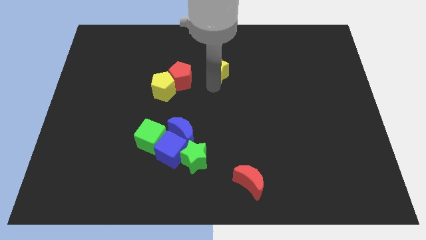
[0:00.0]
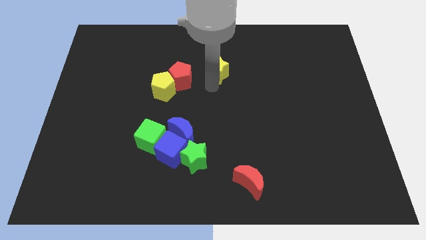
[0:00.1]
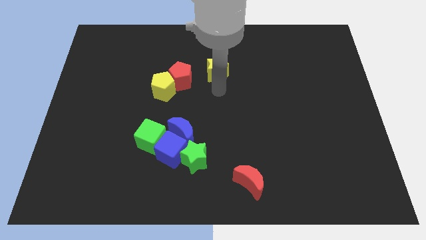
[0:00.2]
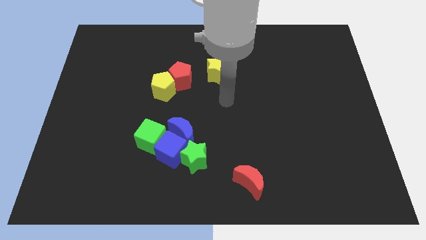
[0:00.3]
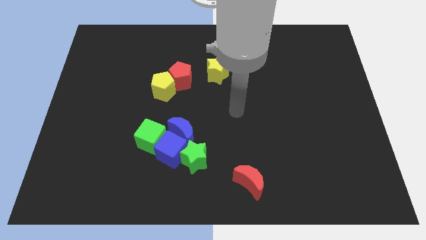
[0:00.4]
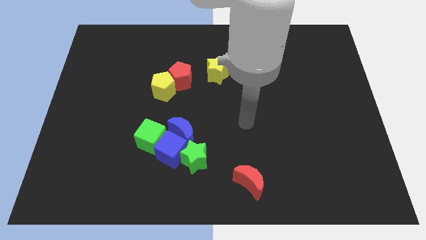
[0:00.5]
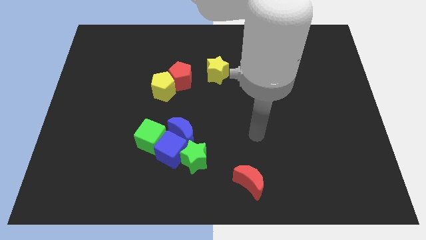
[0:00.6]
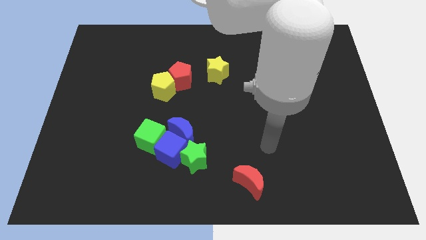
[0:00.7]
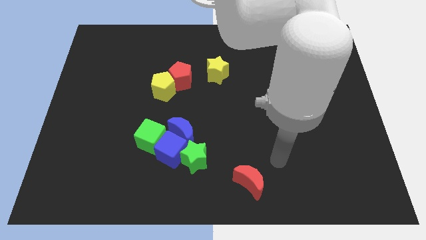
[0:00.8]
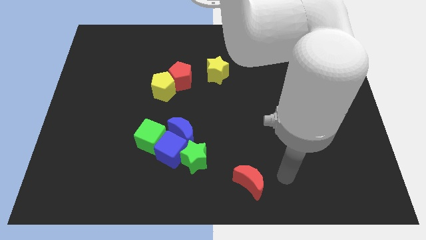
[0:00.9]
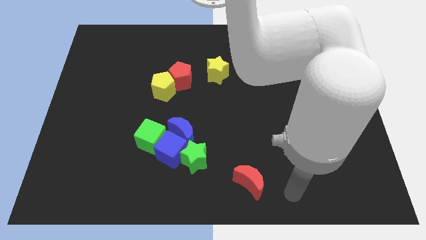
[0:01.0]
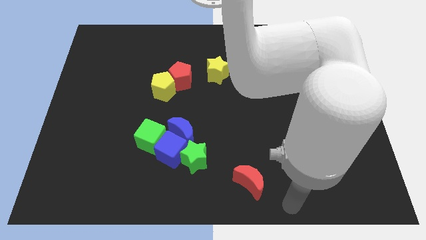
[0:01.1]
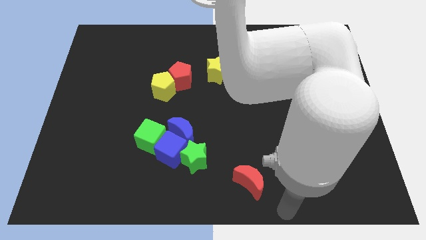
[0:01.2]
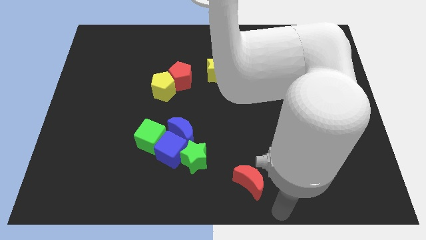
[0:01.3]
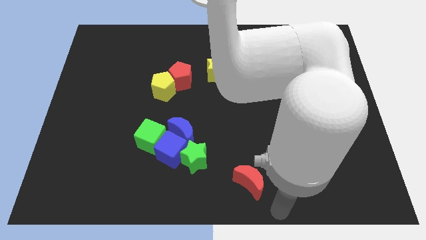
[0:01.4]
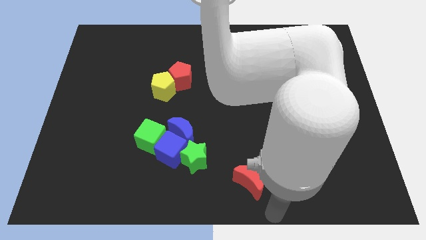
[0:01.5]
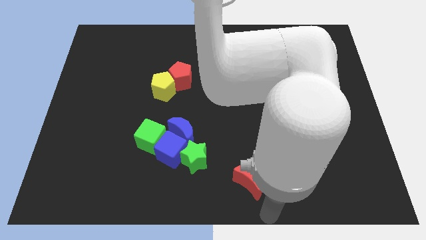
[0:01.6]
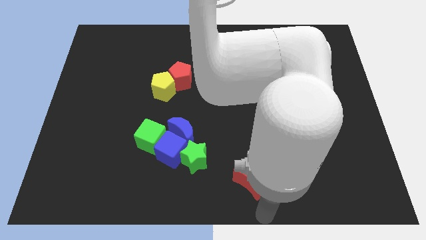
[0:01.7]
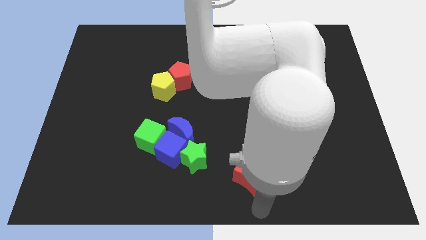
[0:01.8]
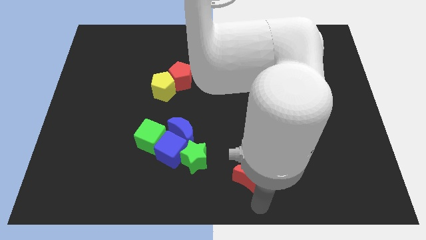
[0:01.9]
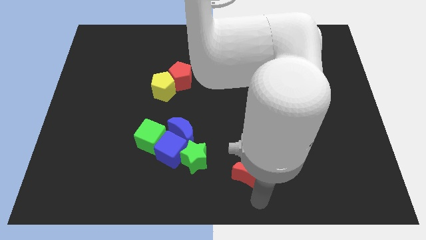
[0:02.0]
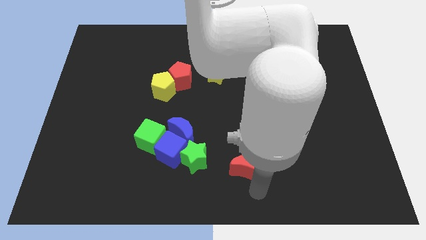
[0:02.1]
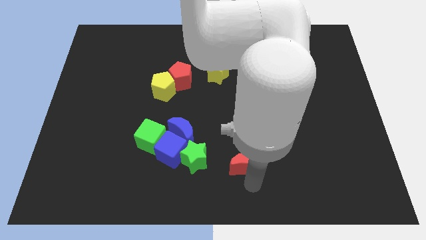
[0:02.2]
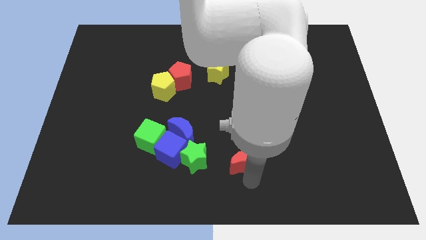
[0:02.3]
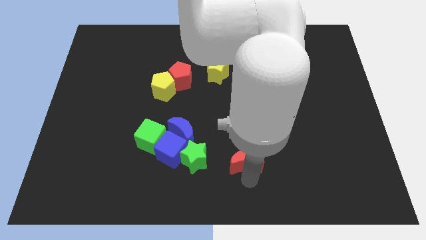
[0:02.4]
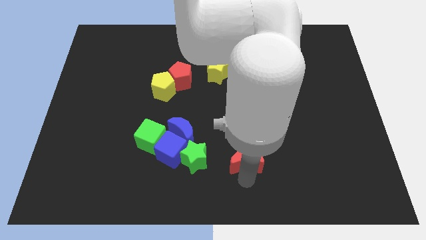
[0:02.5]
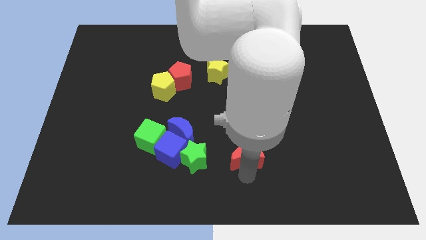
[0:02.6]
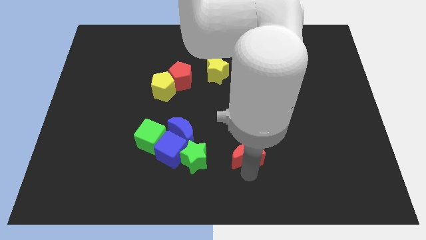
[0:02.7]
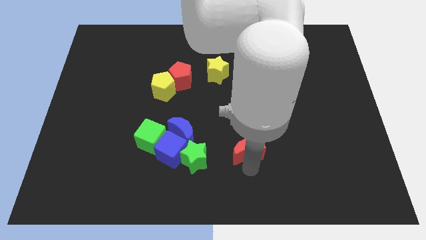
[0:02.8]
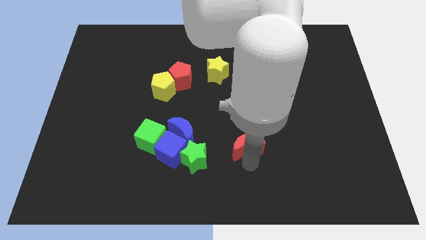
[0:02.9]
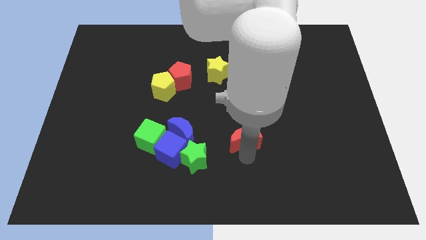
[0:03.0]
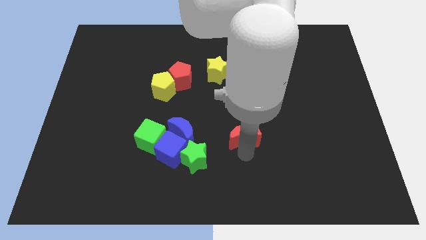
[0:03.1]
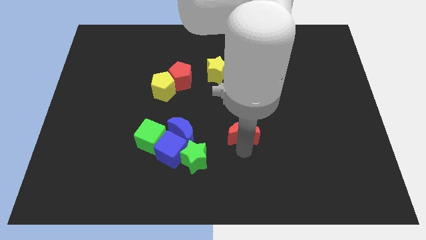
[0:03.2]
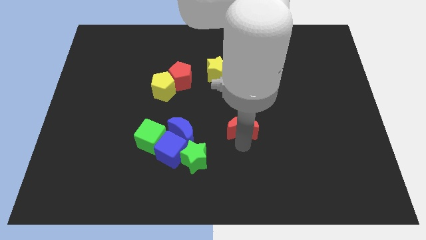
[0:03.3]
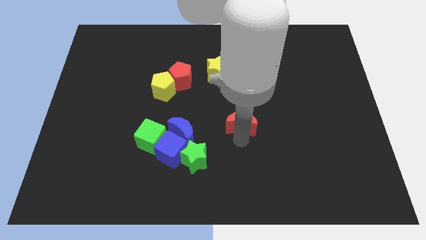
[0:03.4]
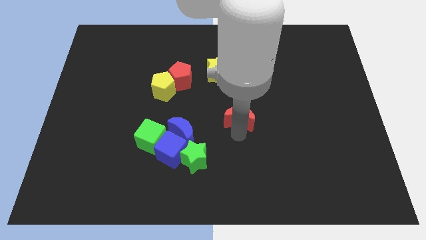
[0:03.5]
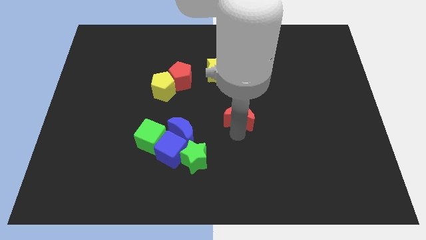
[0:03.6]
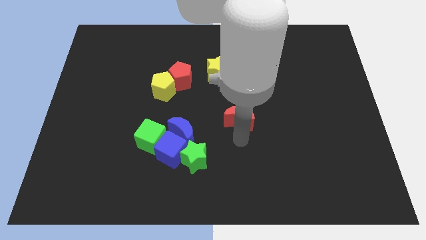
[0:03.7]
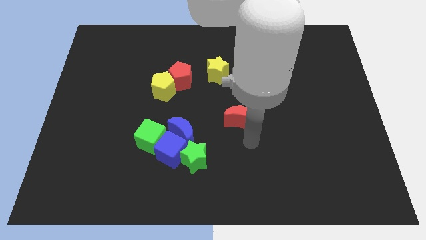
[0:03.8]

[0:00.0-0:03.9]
move the red crescent to the center of the board

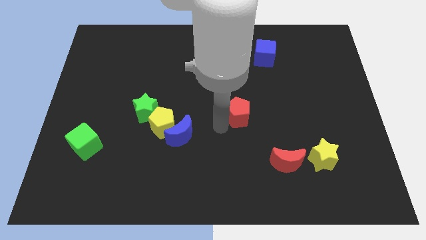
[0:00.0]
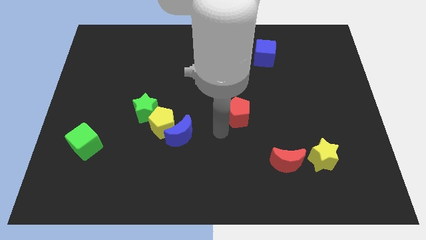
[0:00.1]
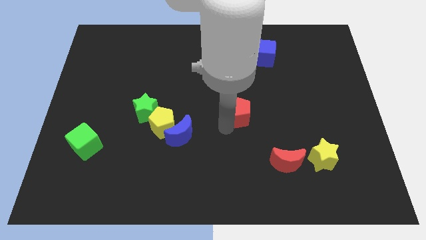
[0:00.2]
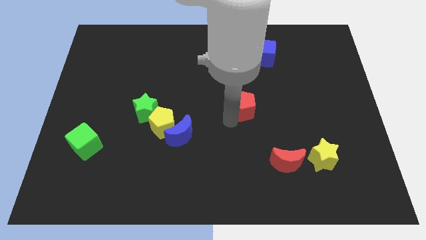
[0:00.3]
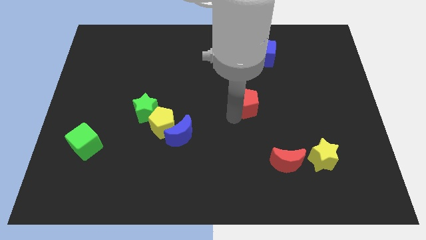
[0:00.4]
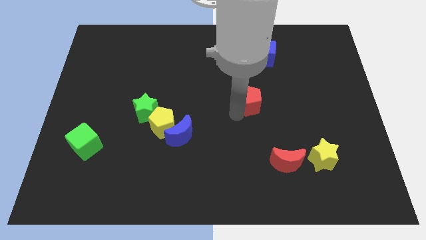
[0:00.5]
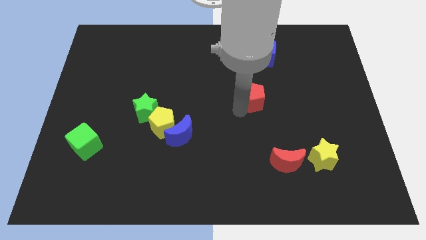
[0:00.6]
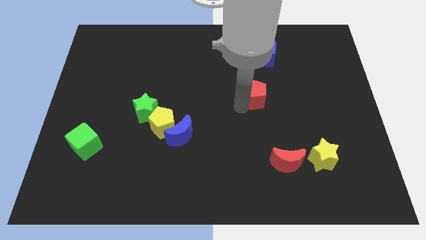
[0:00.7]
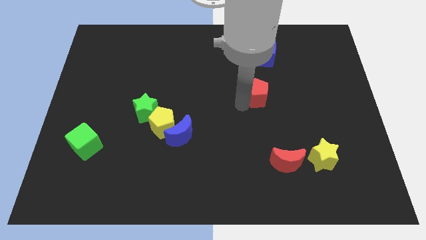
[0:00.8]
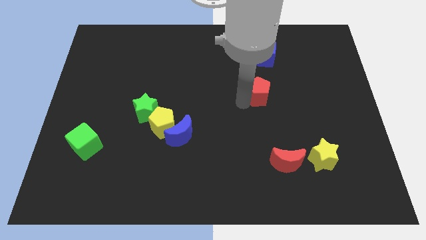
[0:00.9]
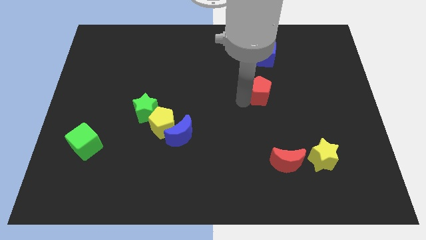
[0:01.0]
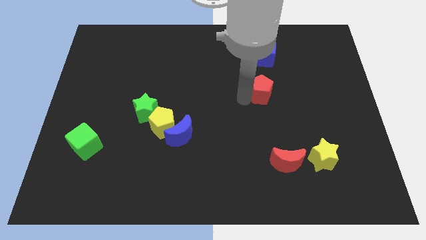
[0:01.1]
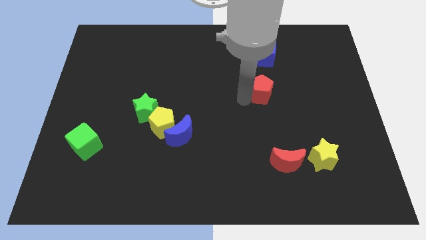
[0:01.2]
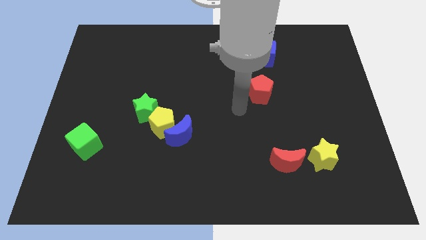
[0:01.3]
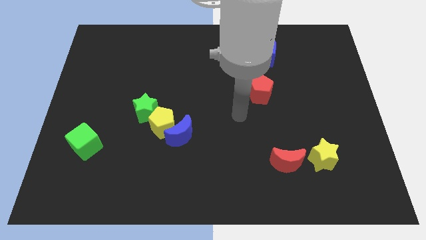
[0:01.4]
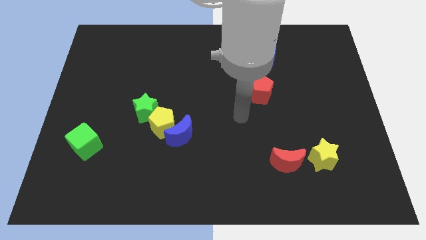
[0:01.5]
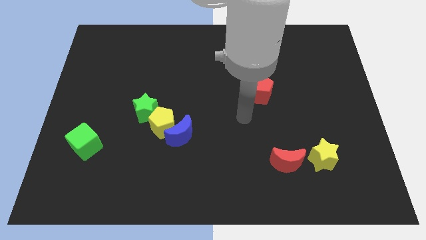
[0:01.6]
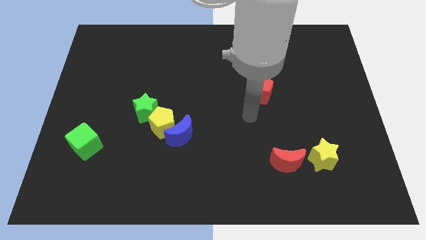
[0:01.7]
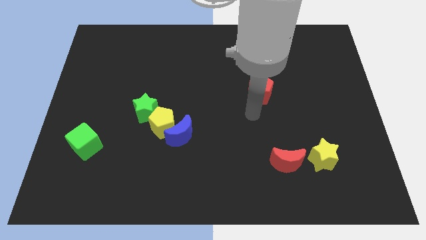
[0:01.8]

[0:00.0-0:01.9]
place red pentagon to the bottom of blue cube

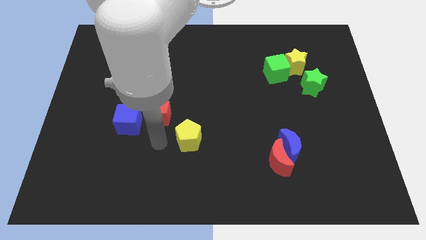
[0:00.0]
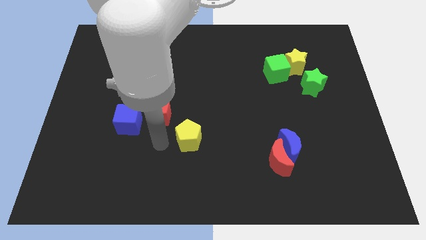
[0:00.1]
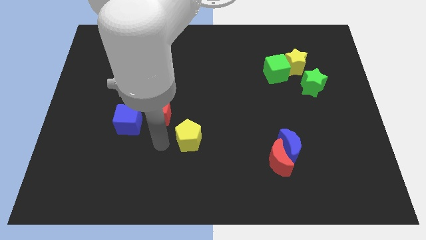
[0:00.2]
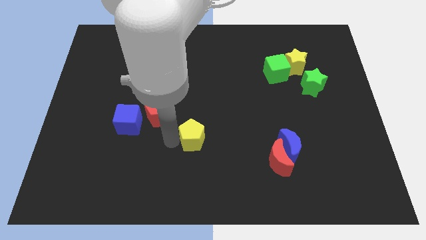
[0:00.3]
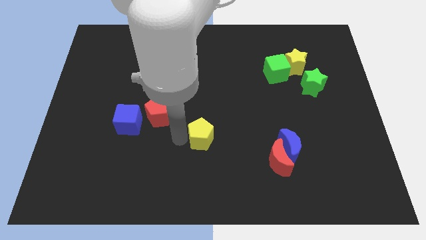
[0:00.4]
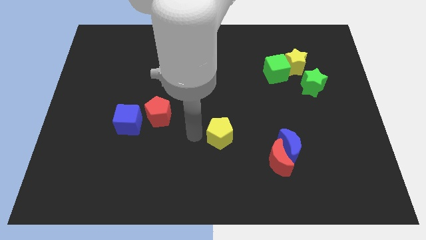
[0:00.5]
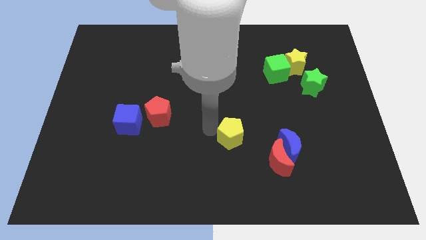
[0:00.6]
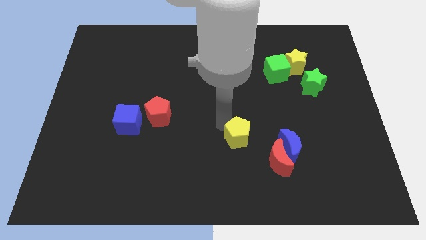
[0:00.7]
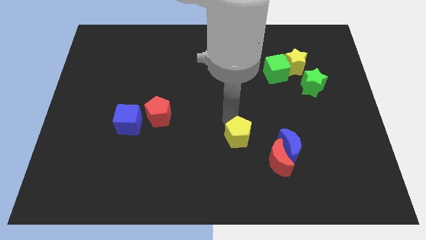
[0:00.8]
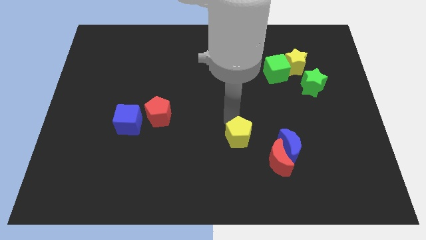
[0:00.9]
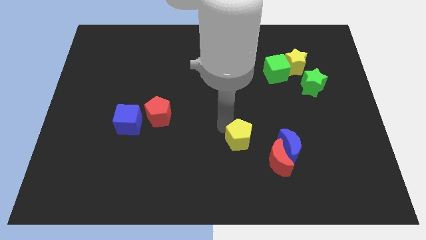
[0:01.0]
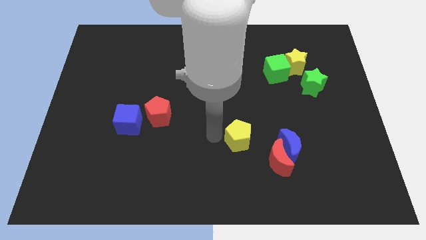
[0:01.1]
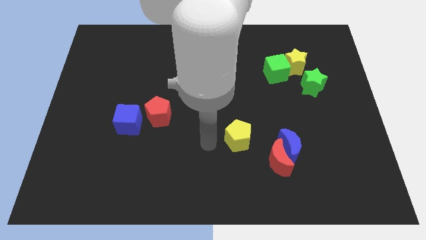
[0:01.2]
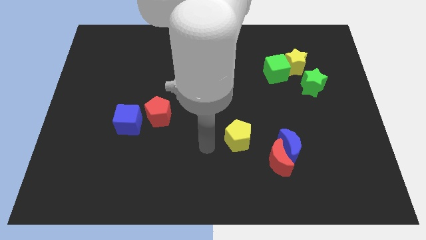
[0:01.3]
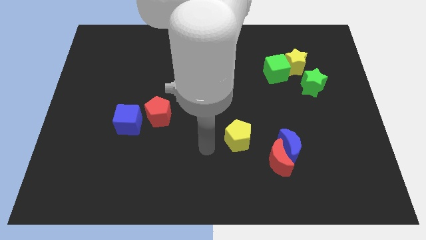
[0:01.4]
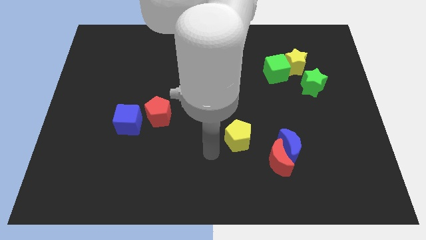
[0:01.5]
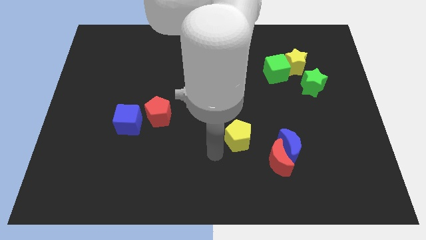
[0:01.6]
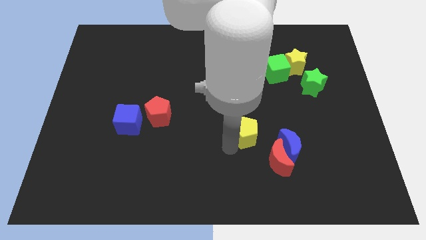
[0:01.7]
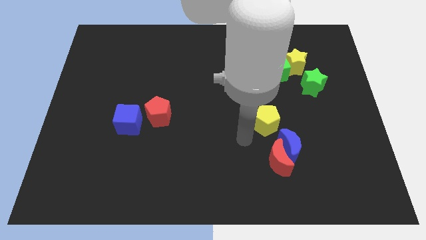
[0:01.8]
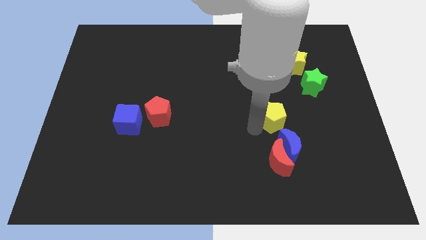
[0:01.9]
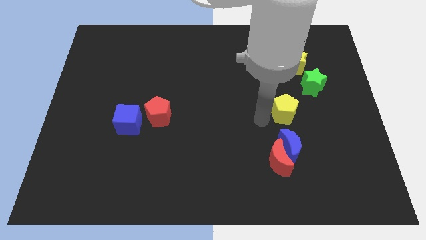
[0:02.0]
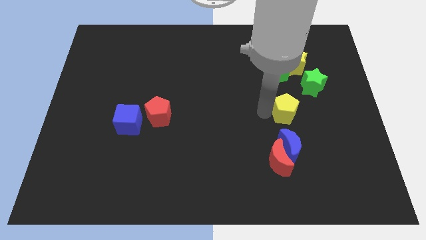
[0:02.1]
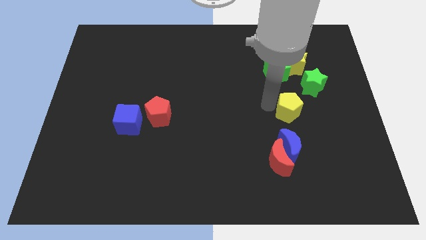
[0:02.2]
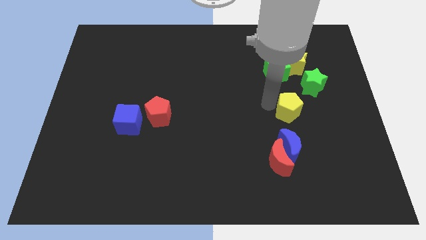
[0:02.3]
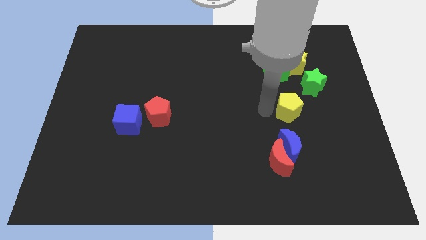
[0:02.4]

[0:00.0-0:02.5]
move the yellow pentagon between blue moon and green star

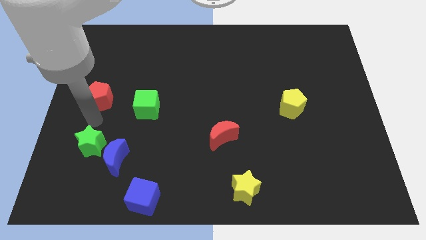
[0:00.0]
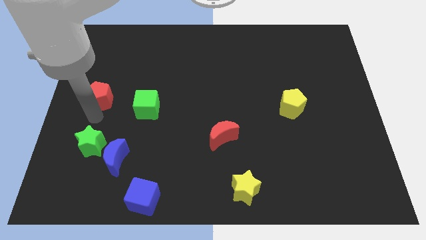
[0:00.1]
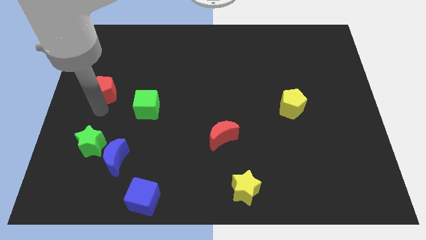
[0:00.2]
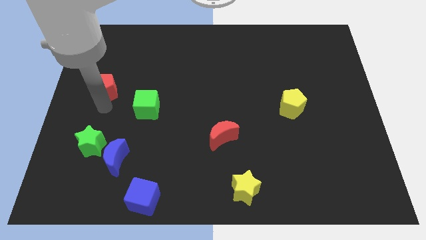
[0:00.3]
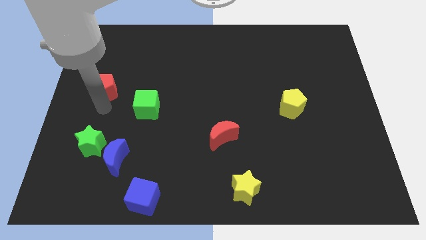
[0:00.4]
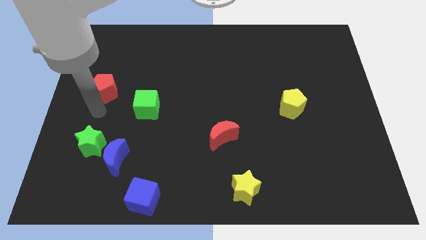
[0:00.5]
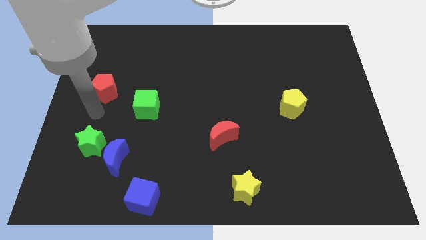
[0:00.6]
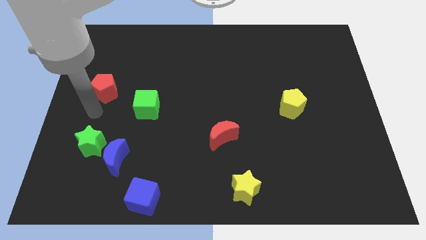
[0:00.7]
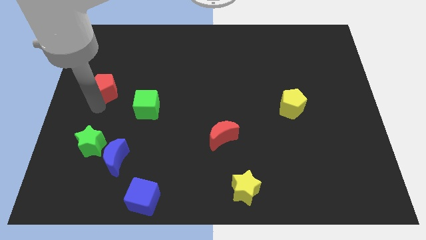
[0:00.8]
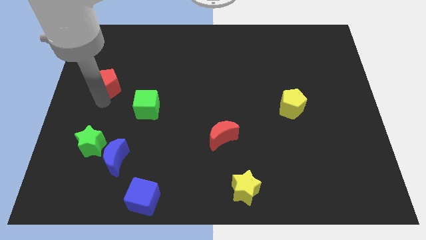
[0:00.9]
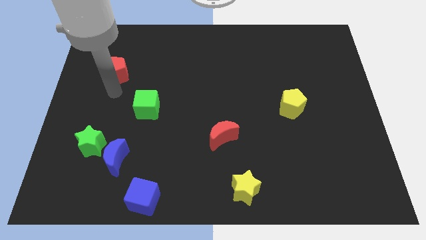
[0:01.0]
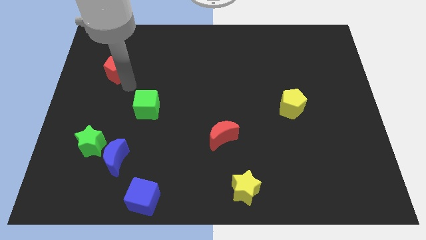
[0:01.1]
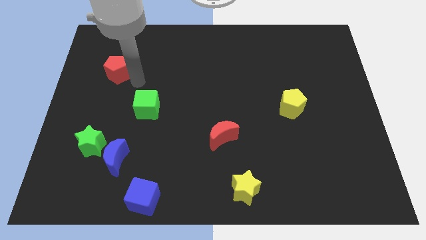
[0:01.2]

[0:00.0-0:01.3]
put the red pentagon diagonally to green cube
